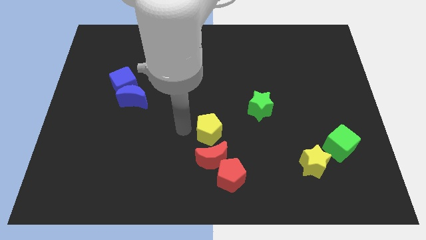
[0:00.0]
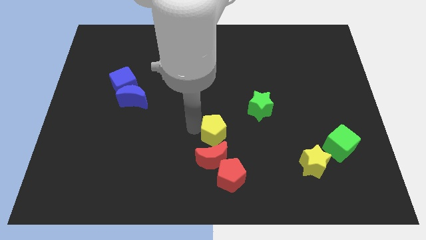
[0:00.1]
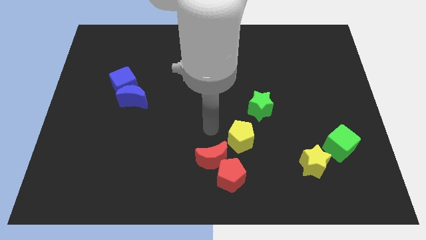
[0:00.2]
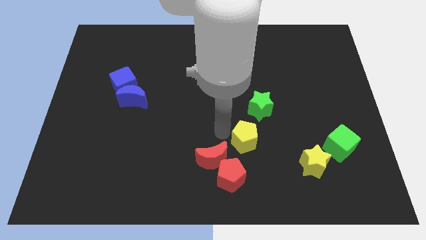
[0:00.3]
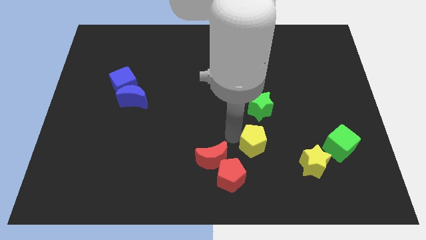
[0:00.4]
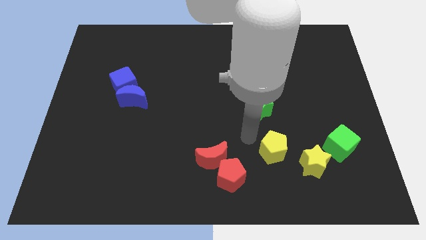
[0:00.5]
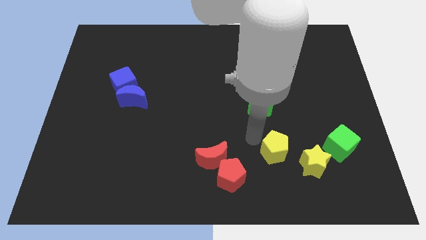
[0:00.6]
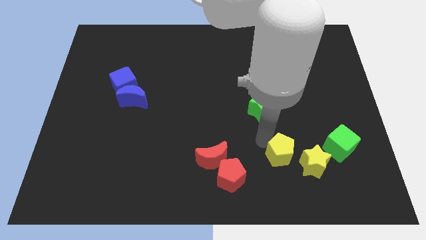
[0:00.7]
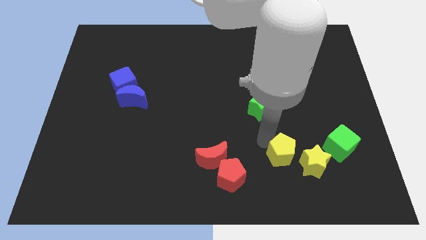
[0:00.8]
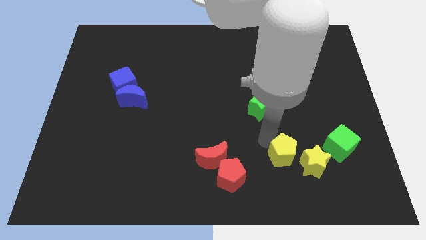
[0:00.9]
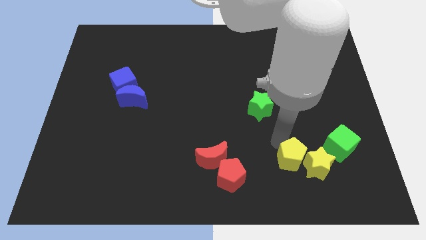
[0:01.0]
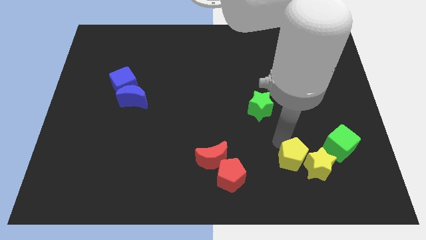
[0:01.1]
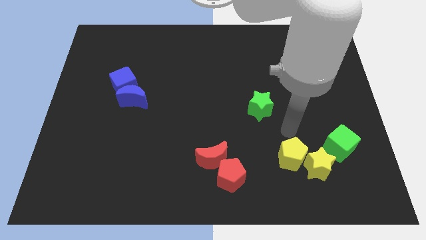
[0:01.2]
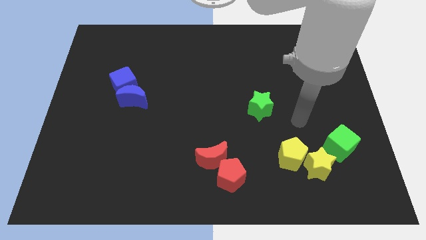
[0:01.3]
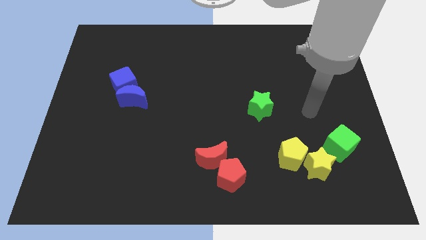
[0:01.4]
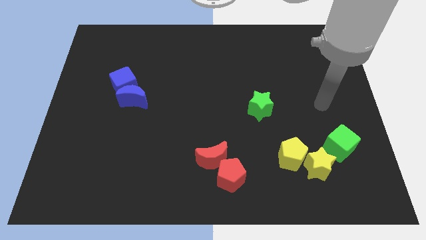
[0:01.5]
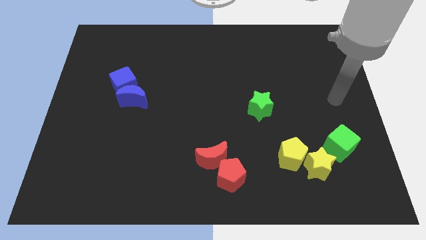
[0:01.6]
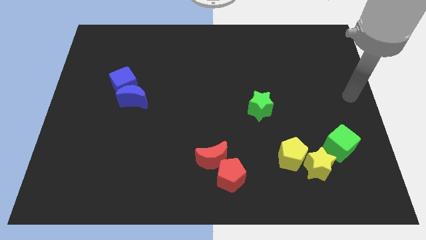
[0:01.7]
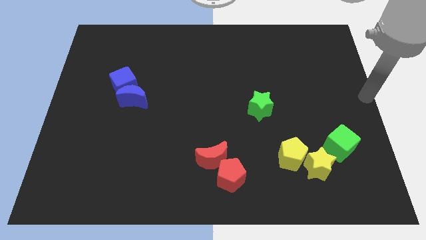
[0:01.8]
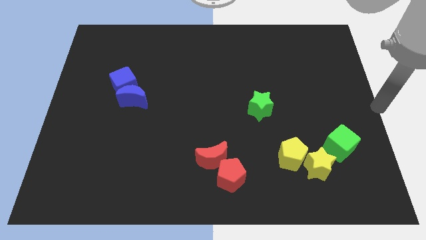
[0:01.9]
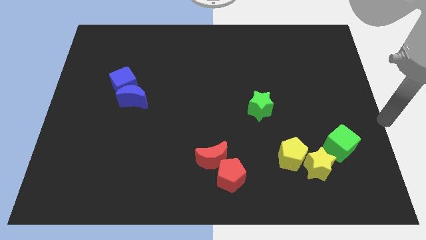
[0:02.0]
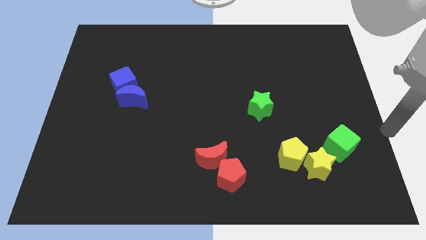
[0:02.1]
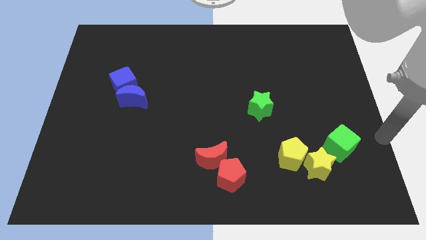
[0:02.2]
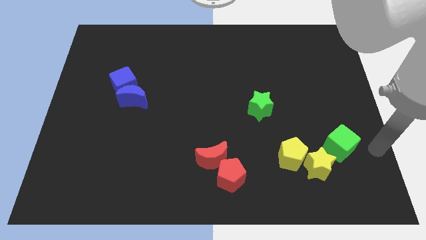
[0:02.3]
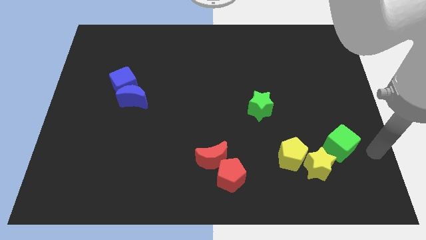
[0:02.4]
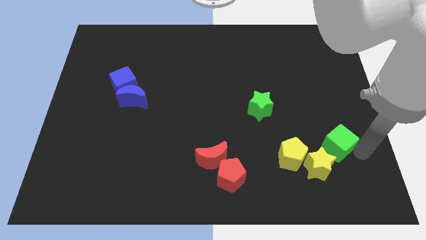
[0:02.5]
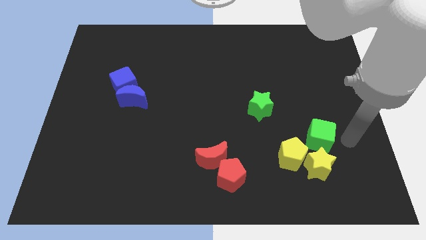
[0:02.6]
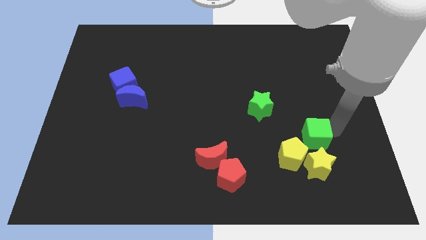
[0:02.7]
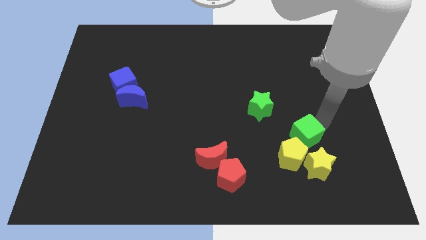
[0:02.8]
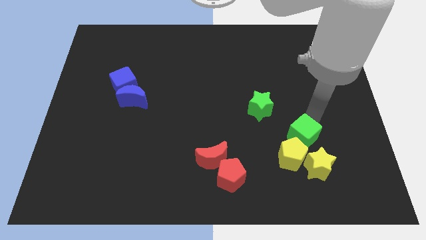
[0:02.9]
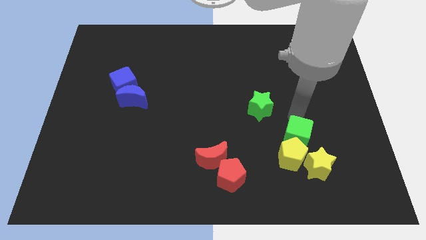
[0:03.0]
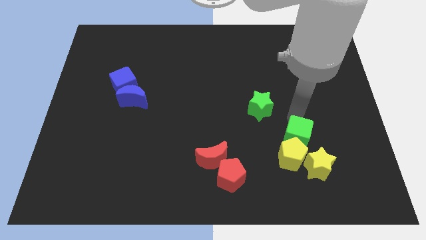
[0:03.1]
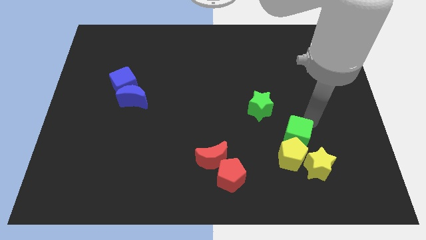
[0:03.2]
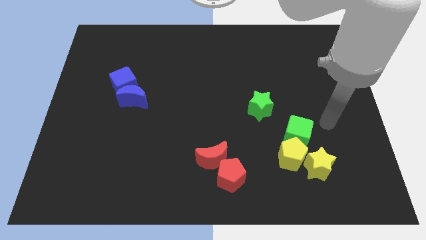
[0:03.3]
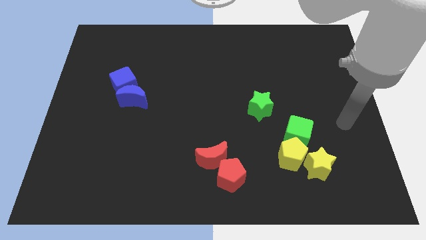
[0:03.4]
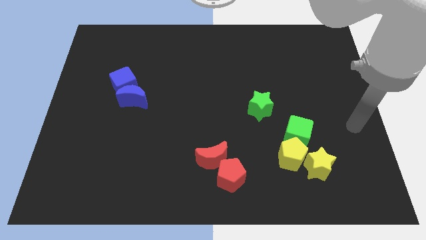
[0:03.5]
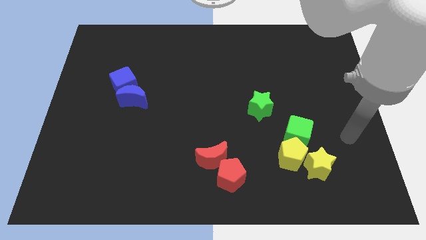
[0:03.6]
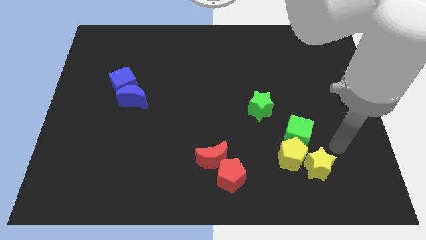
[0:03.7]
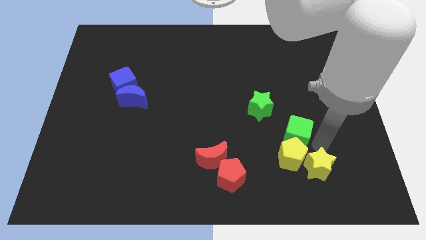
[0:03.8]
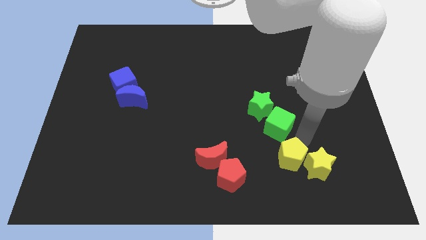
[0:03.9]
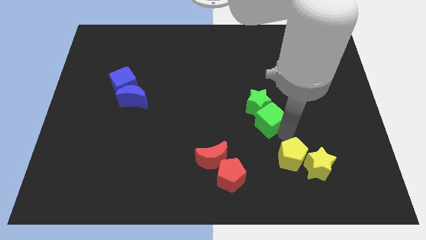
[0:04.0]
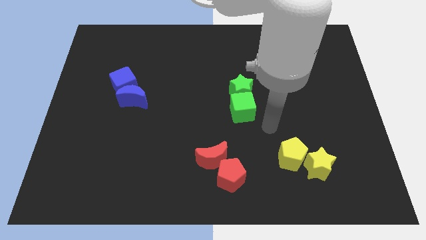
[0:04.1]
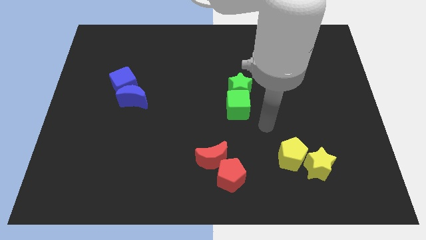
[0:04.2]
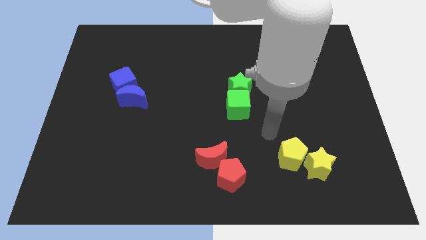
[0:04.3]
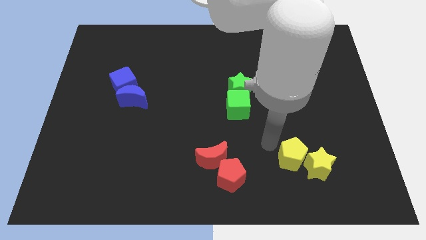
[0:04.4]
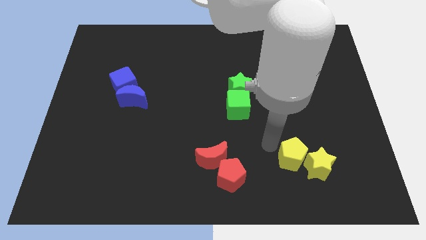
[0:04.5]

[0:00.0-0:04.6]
push yellow pentagon into yellow star along with green cube into green star

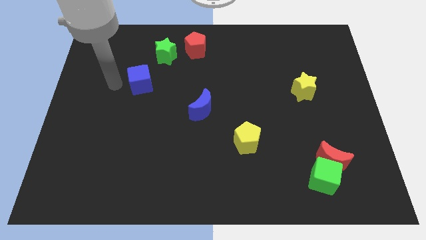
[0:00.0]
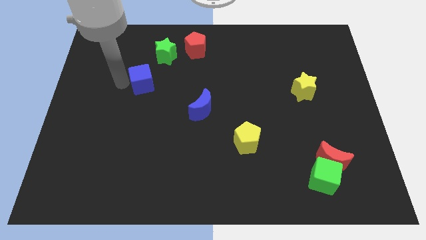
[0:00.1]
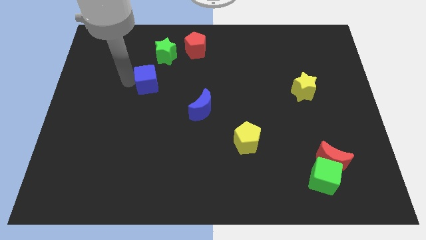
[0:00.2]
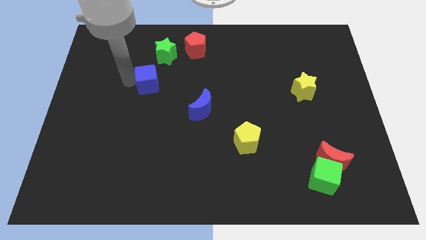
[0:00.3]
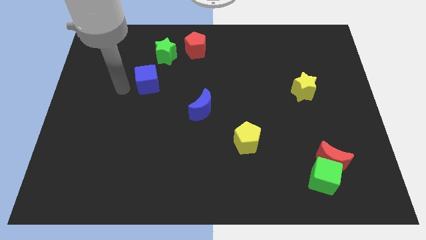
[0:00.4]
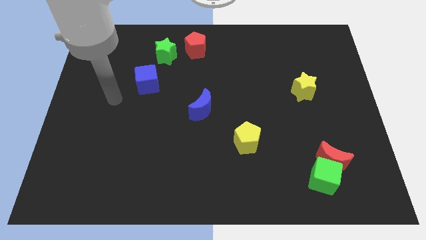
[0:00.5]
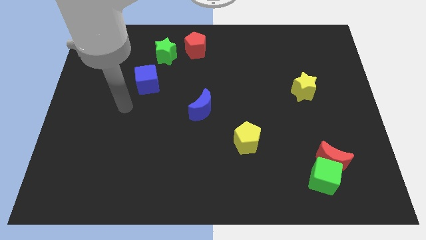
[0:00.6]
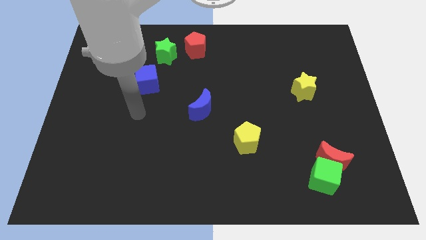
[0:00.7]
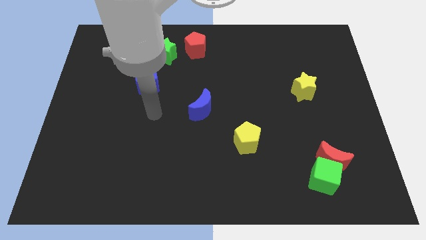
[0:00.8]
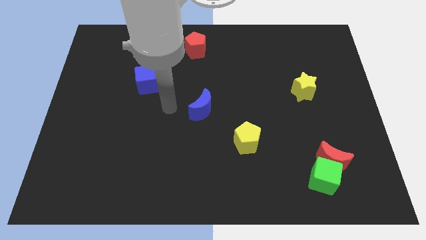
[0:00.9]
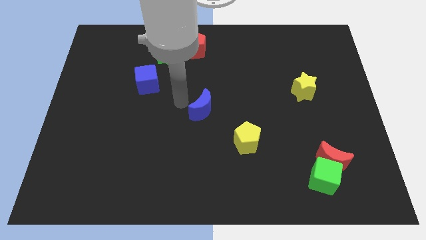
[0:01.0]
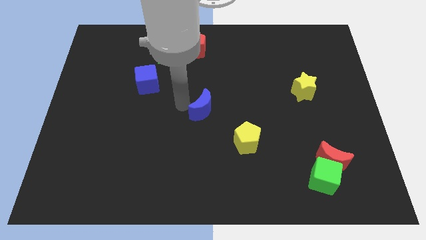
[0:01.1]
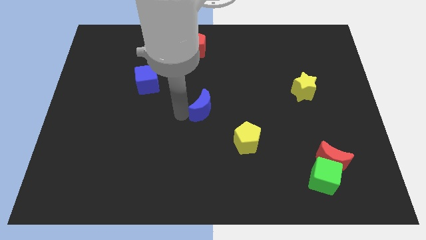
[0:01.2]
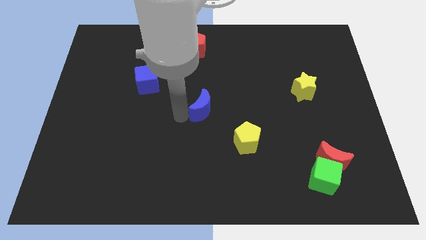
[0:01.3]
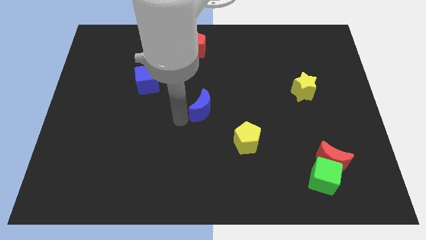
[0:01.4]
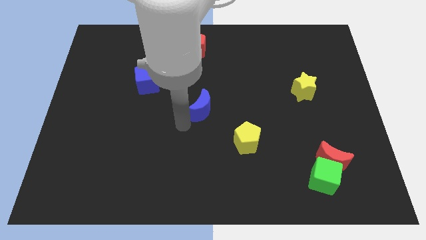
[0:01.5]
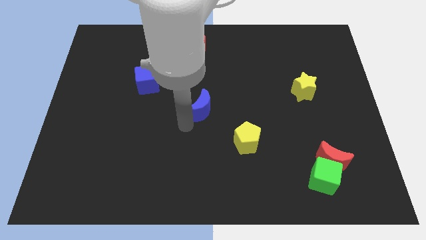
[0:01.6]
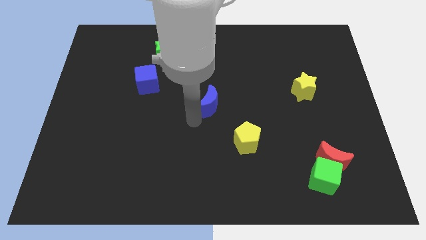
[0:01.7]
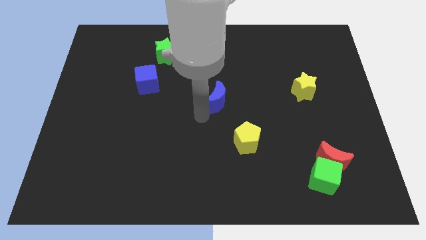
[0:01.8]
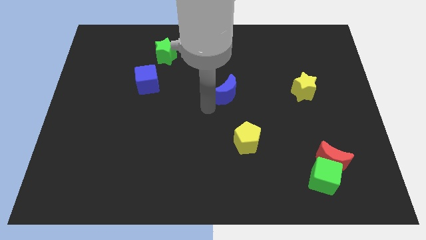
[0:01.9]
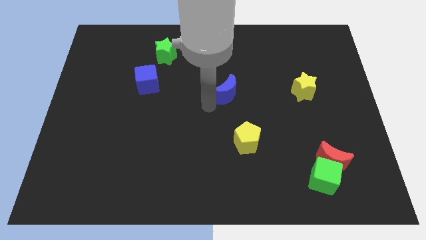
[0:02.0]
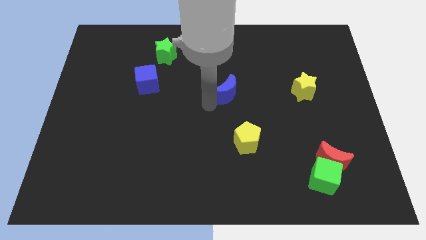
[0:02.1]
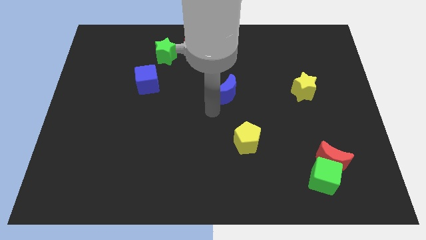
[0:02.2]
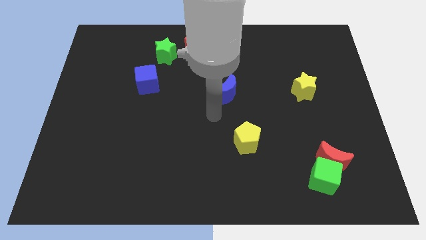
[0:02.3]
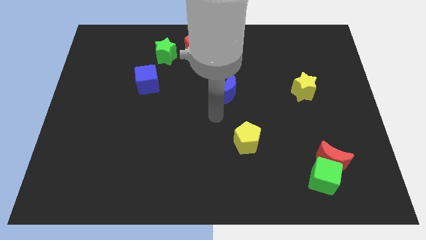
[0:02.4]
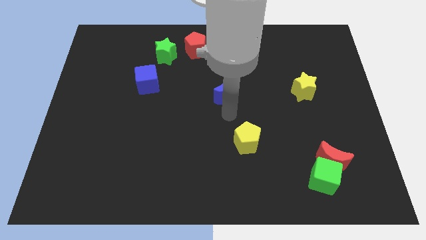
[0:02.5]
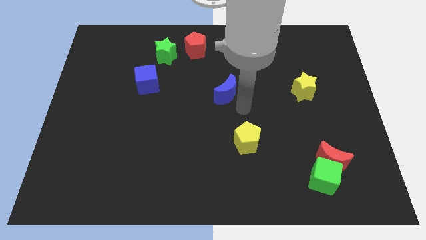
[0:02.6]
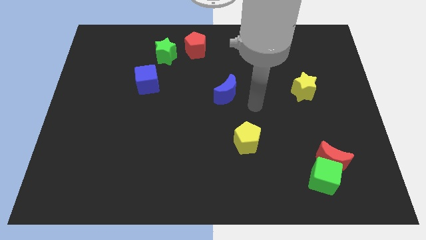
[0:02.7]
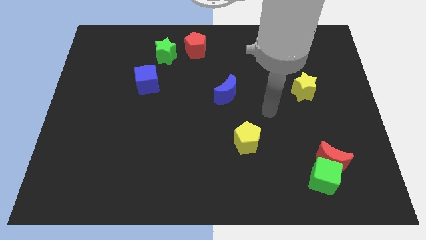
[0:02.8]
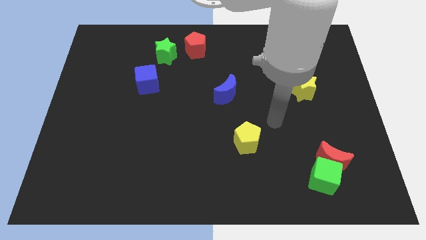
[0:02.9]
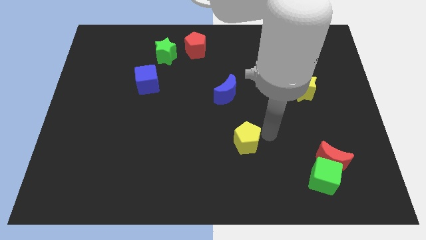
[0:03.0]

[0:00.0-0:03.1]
place blue moon in between red pentagon and yellow pentagon

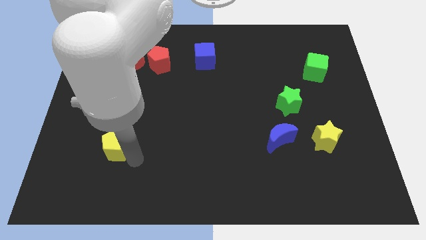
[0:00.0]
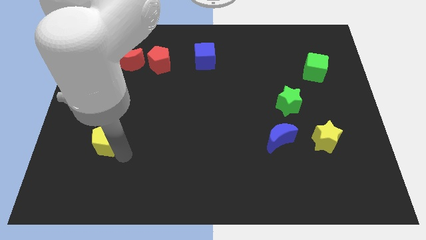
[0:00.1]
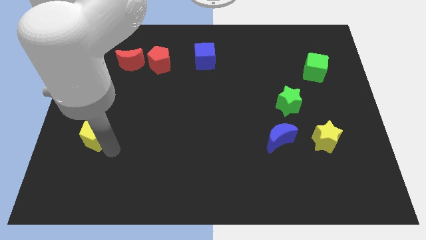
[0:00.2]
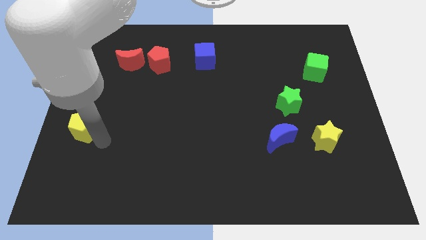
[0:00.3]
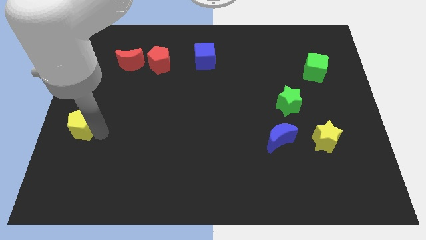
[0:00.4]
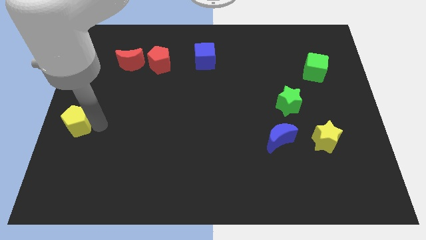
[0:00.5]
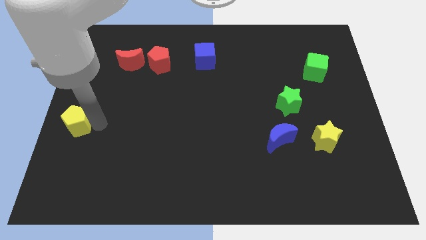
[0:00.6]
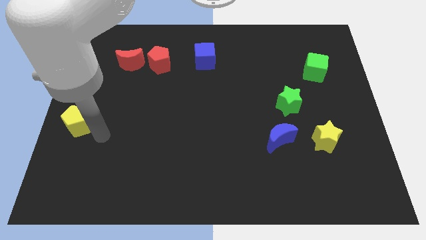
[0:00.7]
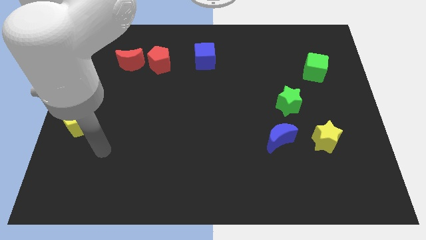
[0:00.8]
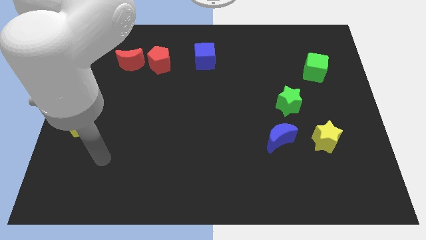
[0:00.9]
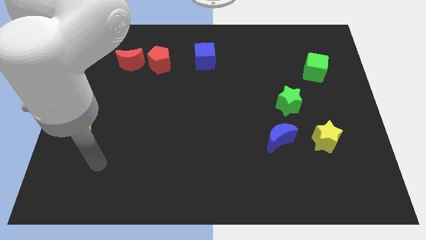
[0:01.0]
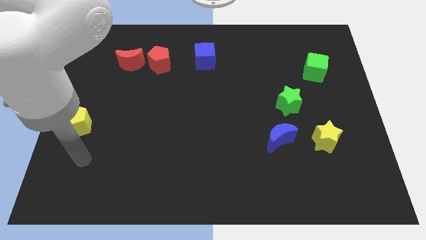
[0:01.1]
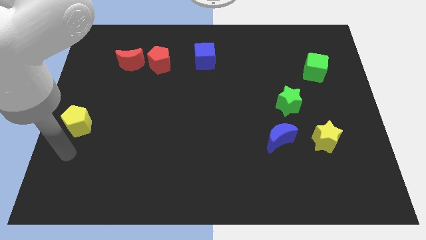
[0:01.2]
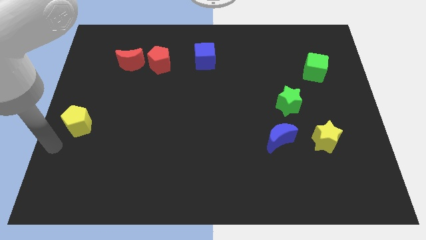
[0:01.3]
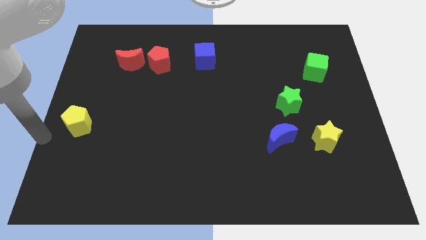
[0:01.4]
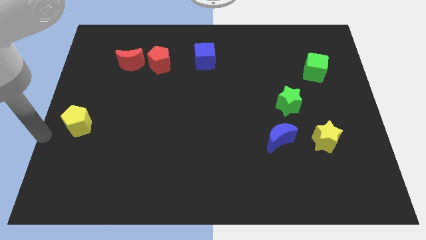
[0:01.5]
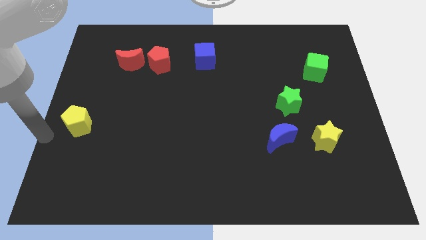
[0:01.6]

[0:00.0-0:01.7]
move the yellow pentagon towards the left center
